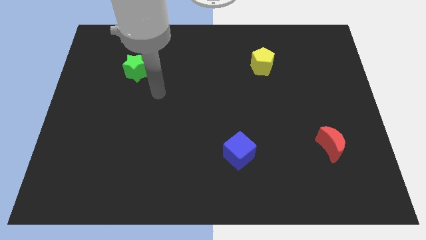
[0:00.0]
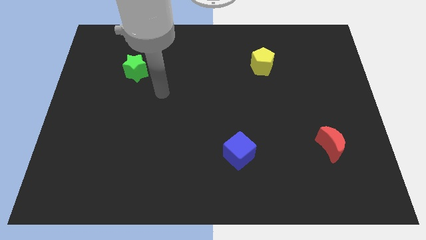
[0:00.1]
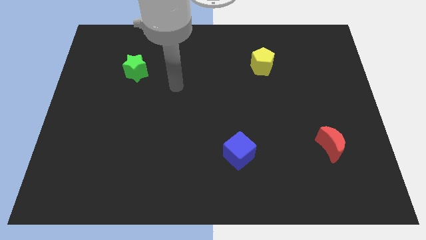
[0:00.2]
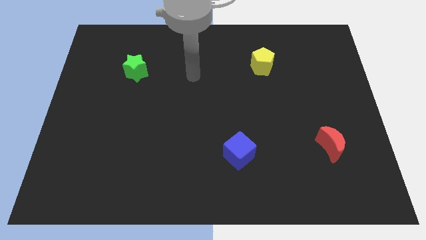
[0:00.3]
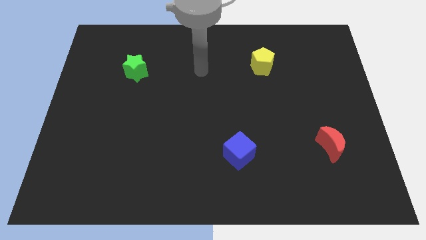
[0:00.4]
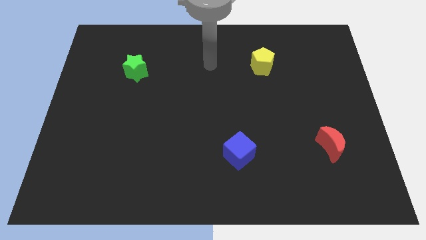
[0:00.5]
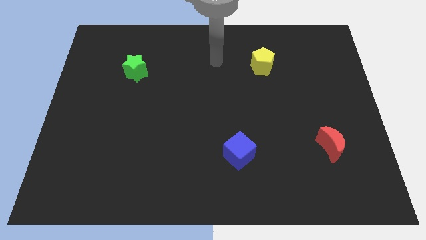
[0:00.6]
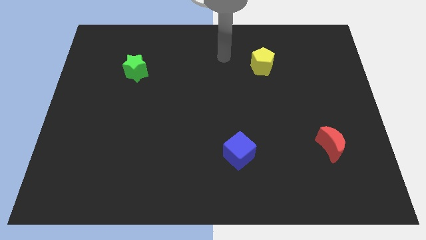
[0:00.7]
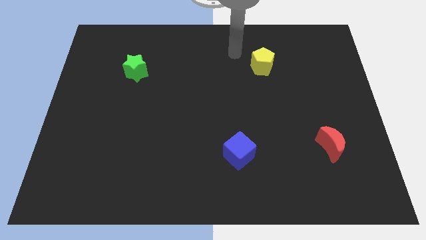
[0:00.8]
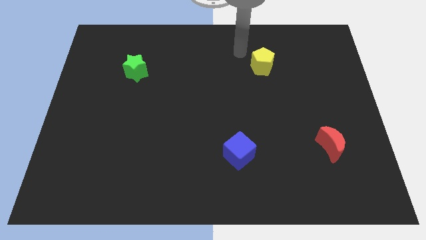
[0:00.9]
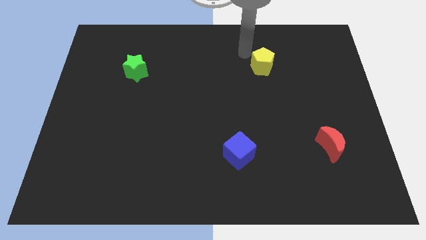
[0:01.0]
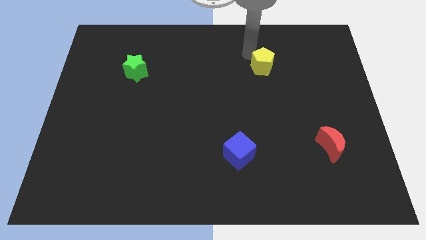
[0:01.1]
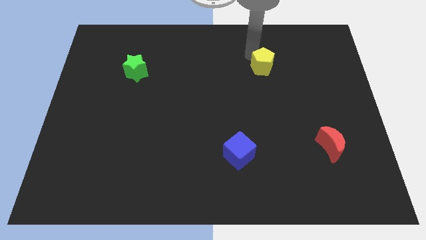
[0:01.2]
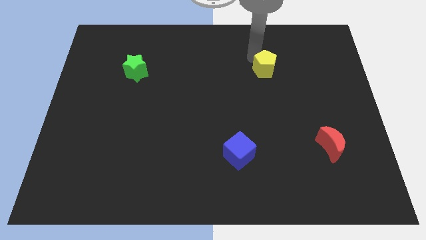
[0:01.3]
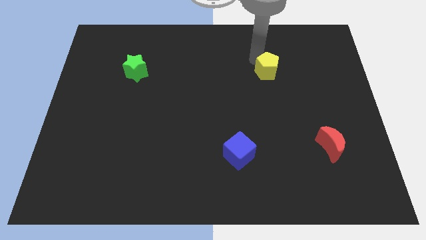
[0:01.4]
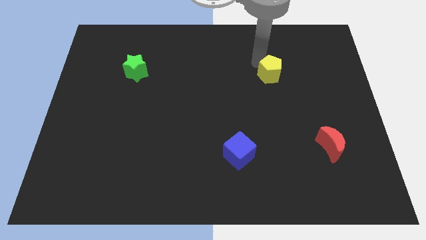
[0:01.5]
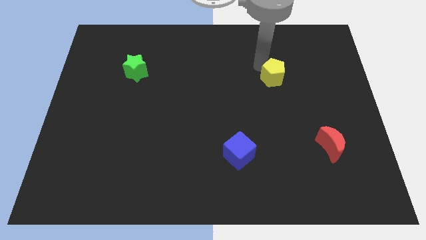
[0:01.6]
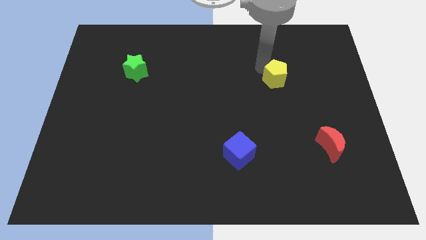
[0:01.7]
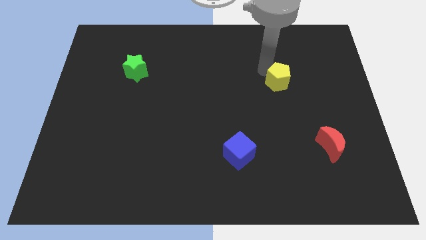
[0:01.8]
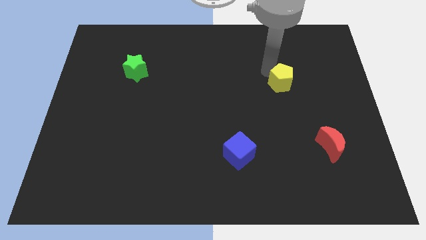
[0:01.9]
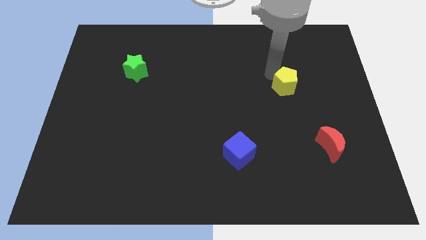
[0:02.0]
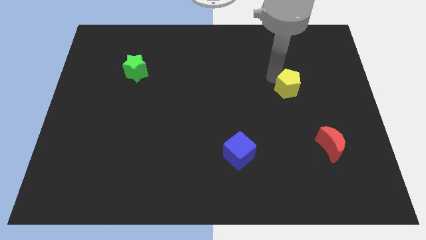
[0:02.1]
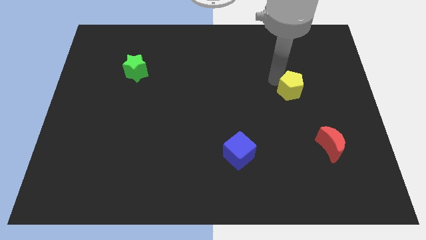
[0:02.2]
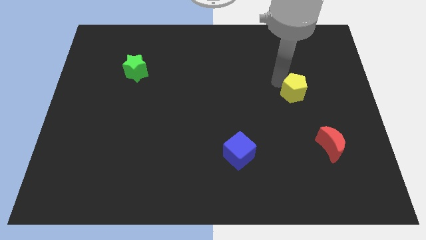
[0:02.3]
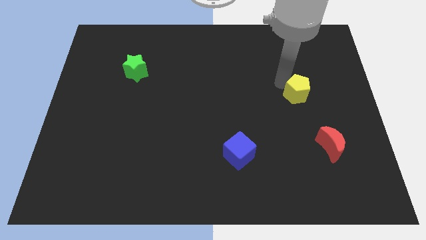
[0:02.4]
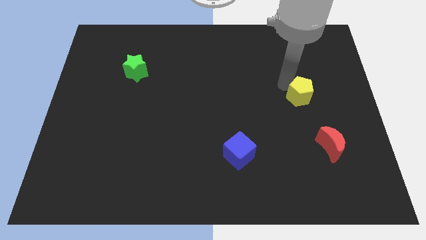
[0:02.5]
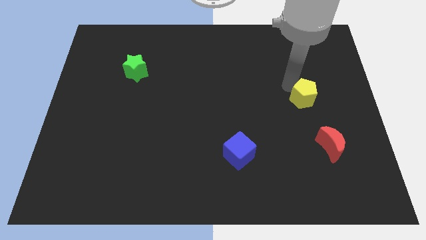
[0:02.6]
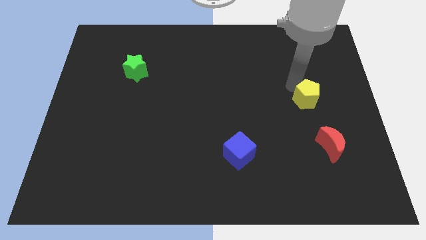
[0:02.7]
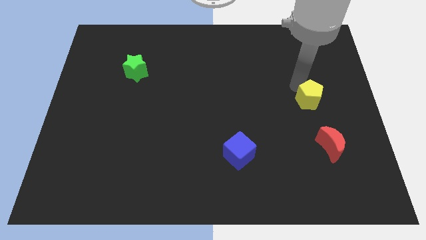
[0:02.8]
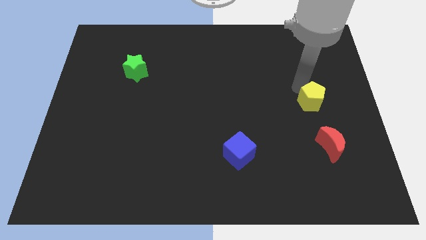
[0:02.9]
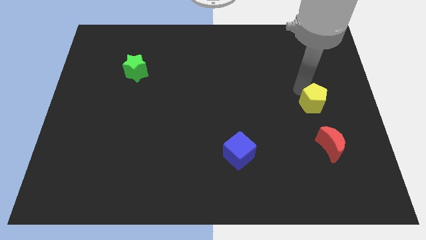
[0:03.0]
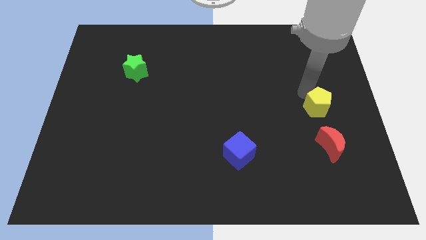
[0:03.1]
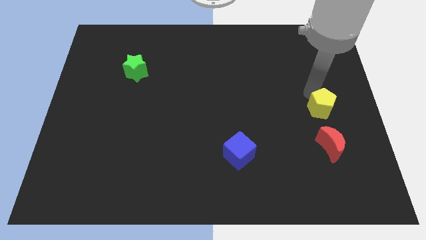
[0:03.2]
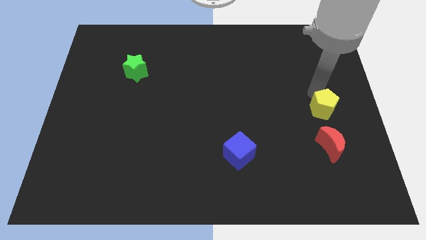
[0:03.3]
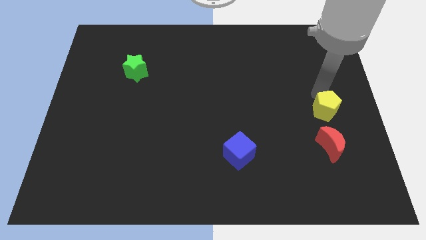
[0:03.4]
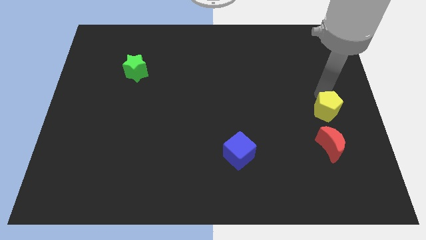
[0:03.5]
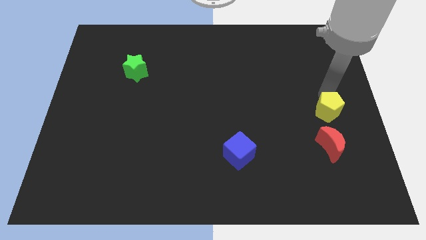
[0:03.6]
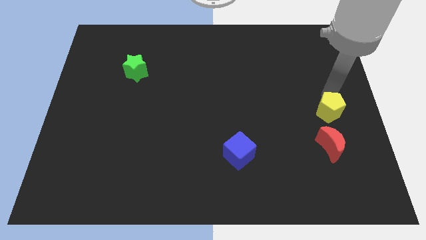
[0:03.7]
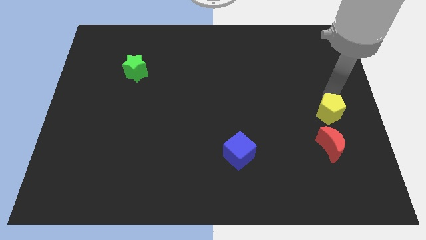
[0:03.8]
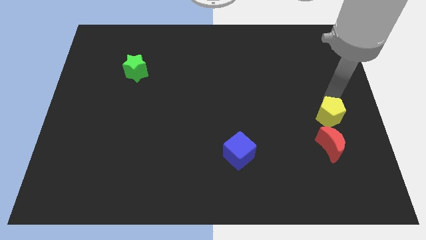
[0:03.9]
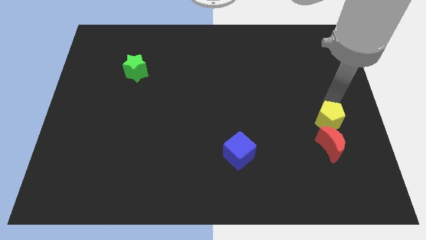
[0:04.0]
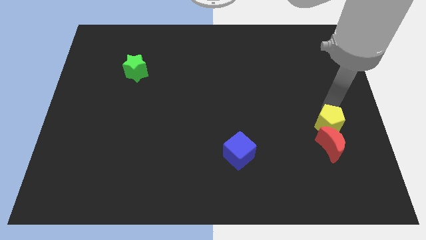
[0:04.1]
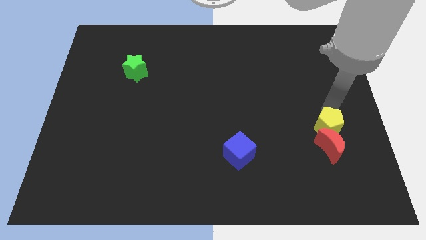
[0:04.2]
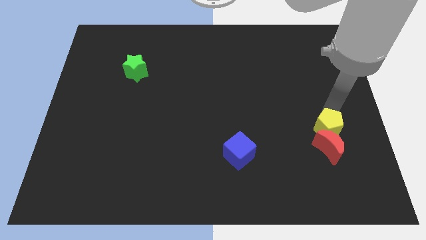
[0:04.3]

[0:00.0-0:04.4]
move the yellow block close to the red block

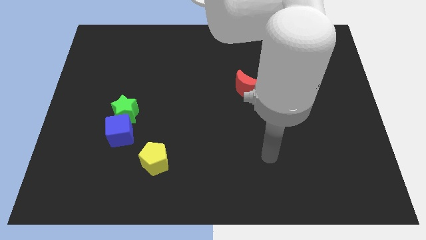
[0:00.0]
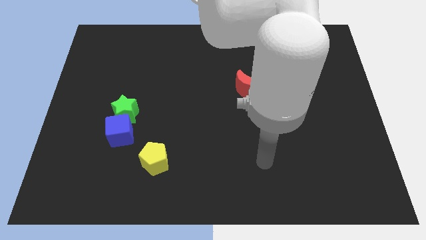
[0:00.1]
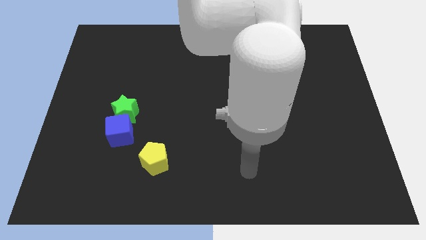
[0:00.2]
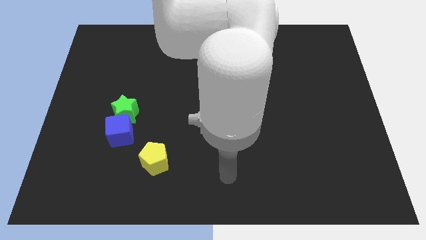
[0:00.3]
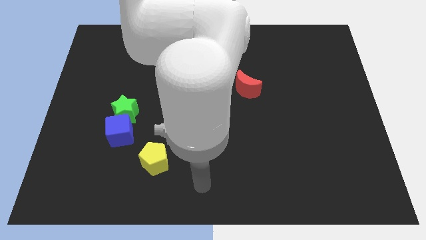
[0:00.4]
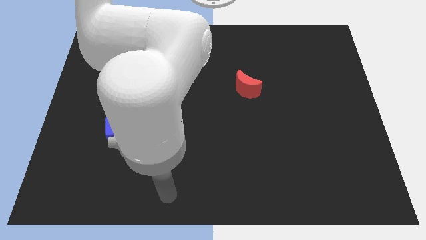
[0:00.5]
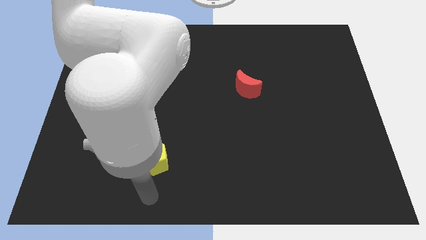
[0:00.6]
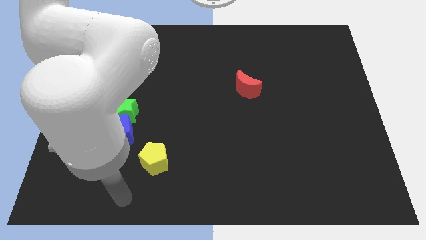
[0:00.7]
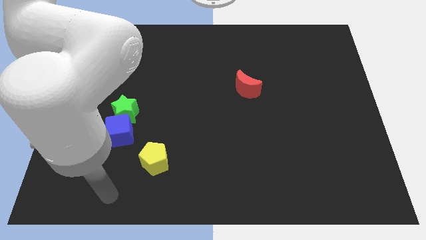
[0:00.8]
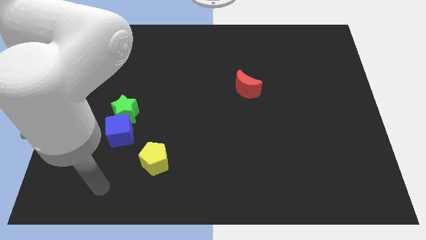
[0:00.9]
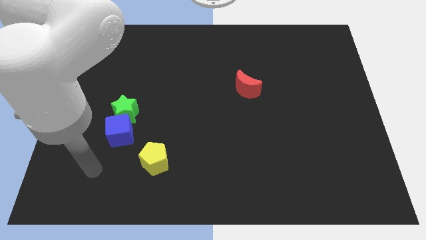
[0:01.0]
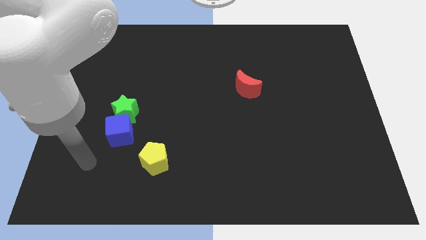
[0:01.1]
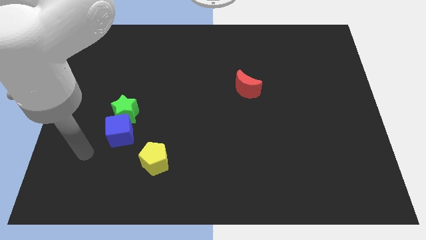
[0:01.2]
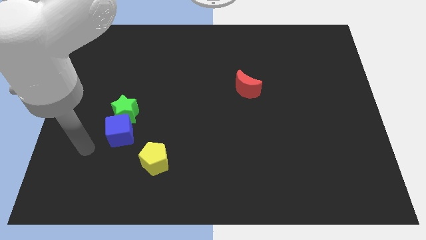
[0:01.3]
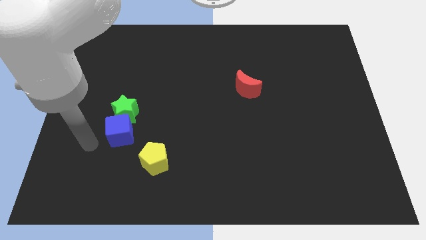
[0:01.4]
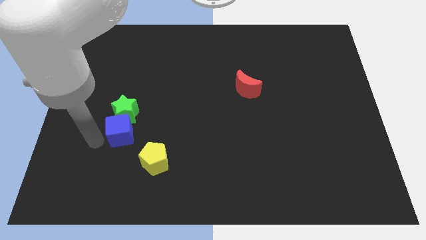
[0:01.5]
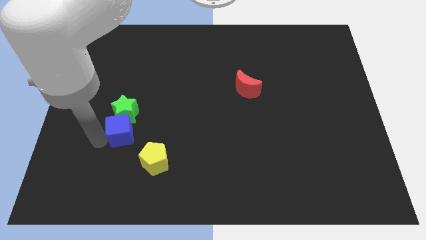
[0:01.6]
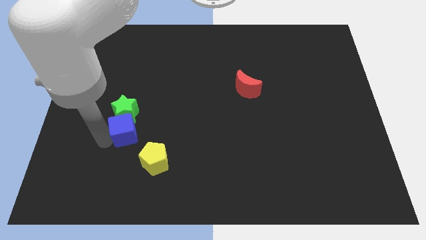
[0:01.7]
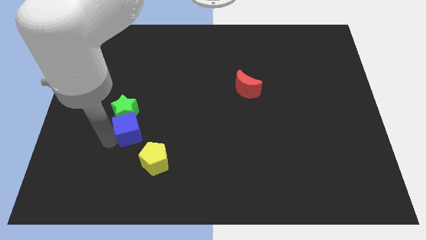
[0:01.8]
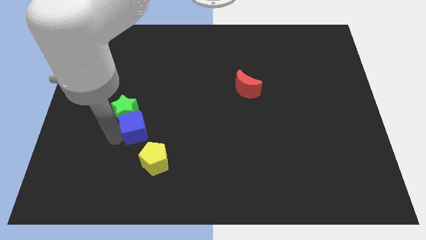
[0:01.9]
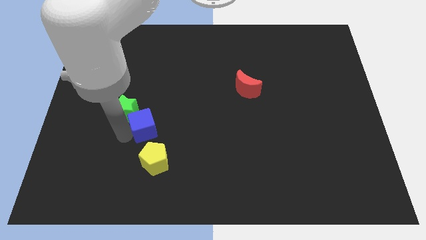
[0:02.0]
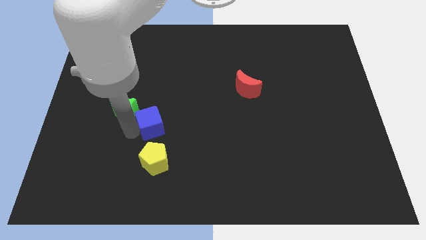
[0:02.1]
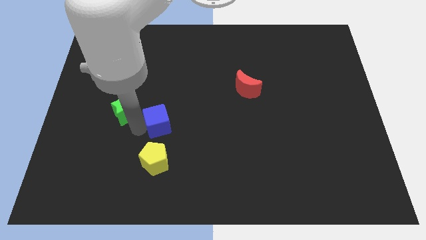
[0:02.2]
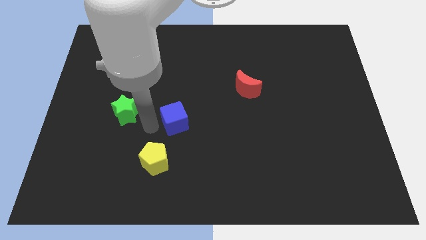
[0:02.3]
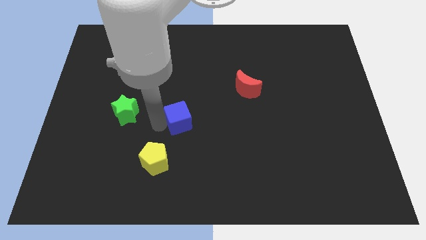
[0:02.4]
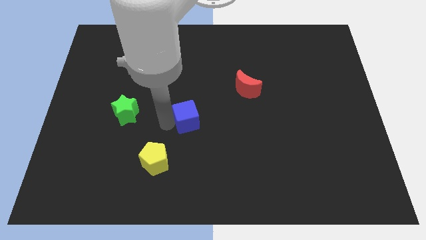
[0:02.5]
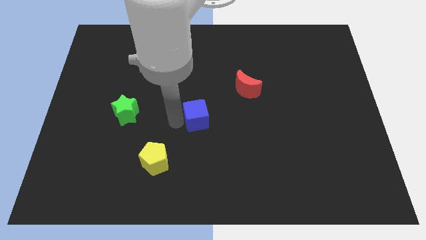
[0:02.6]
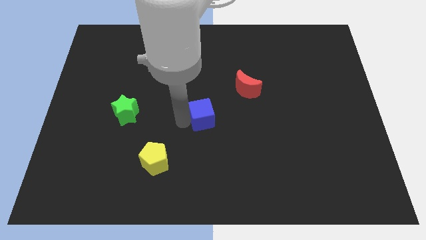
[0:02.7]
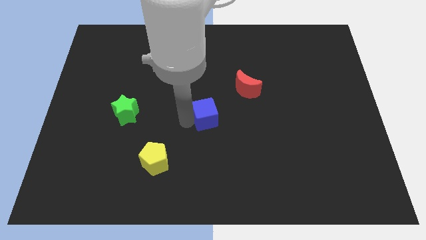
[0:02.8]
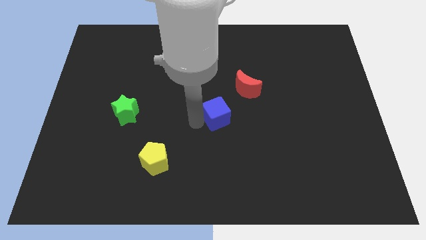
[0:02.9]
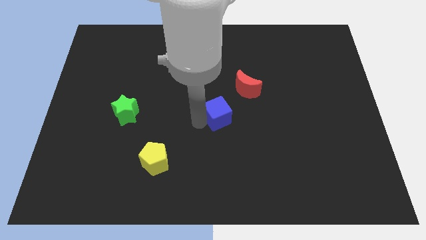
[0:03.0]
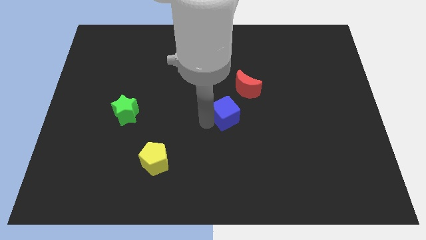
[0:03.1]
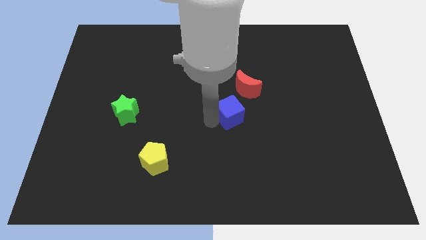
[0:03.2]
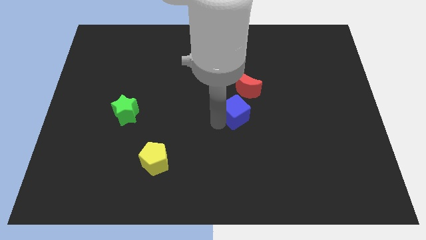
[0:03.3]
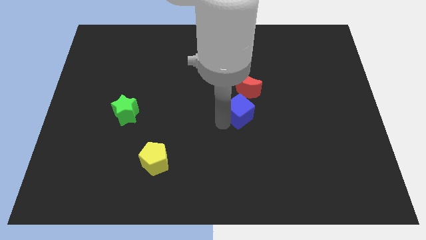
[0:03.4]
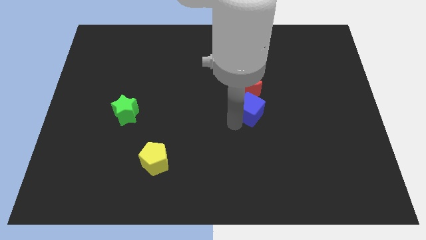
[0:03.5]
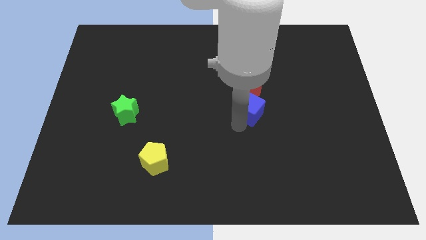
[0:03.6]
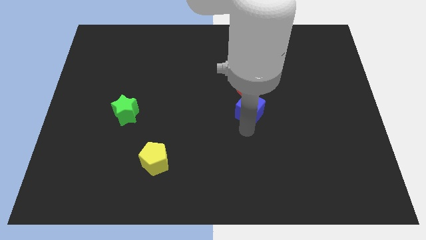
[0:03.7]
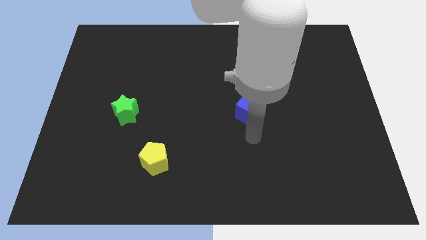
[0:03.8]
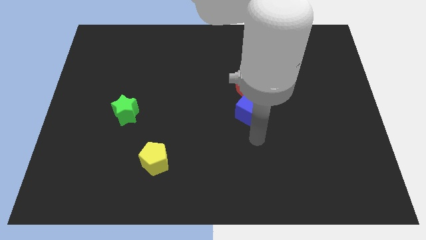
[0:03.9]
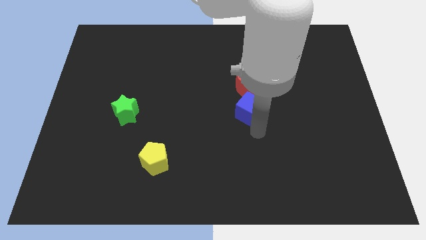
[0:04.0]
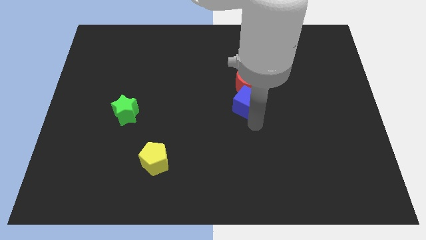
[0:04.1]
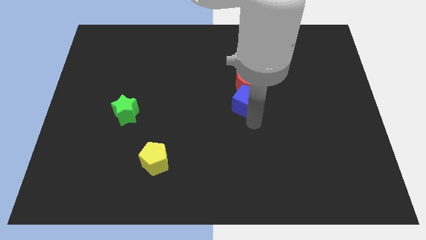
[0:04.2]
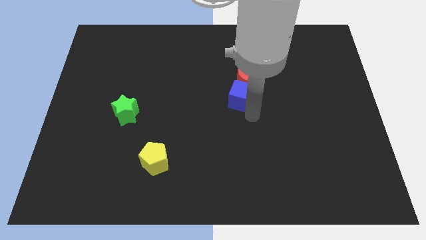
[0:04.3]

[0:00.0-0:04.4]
push the cube close to the red moon
